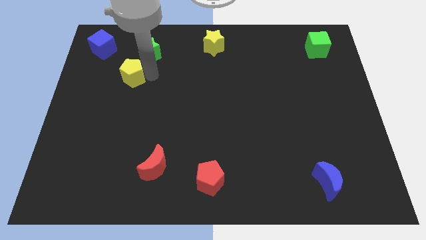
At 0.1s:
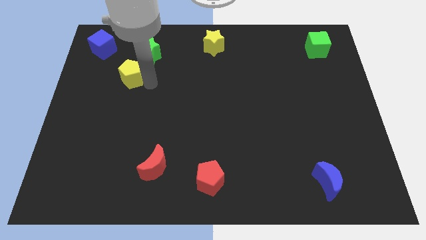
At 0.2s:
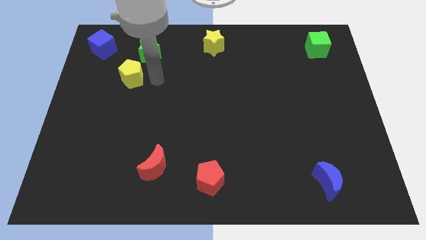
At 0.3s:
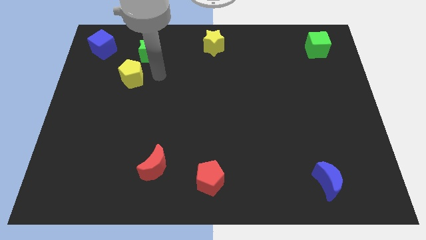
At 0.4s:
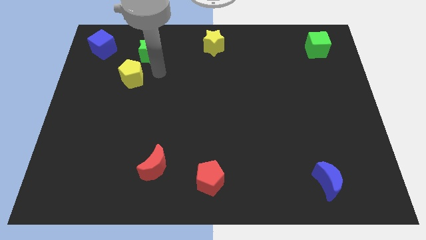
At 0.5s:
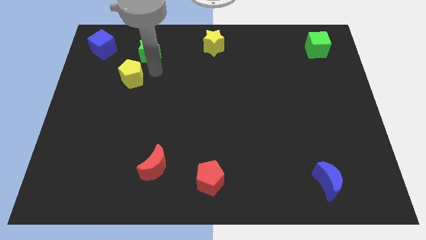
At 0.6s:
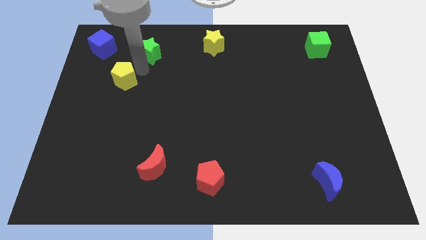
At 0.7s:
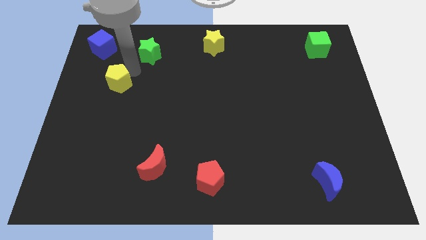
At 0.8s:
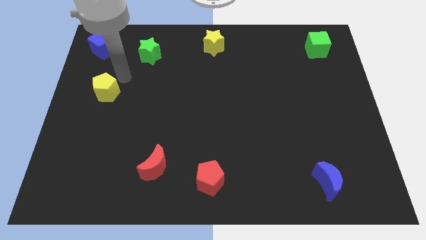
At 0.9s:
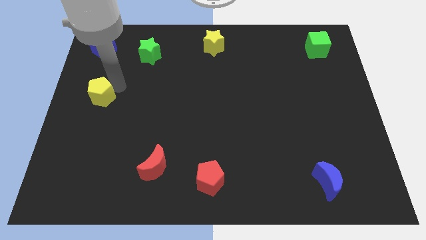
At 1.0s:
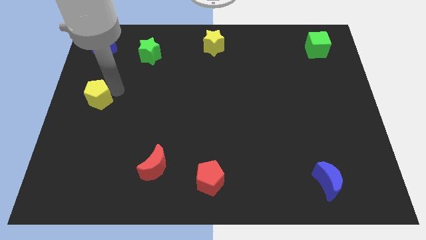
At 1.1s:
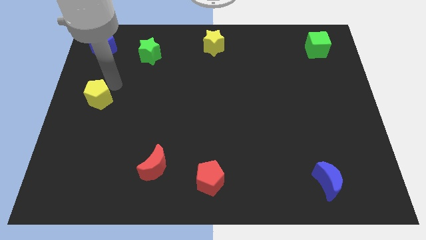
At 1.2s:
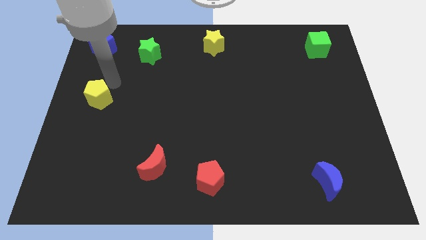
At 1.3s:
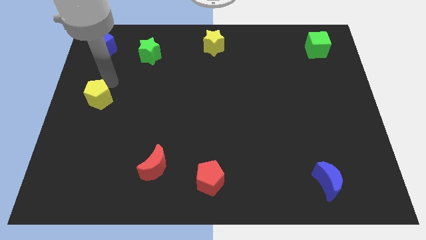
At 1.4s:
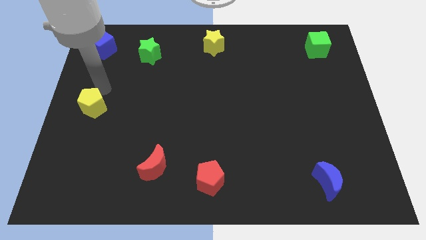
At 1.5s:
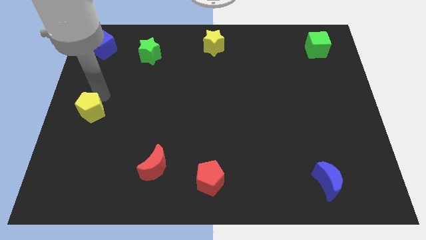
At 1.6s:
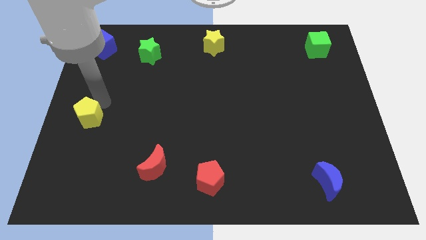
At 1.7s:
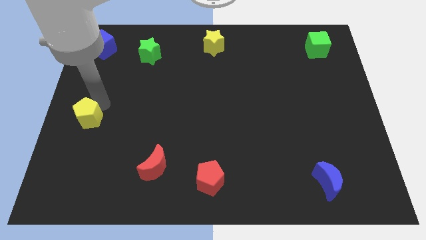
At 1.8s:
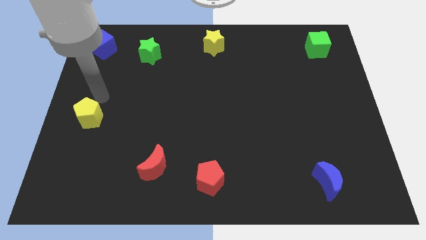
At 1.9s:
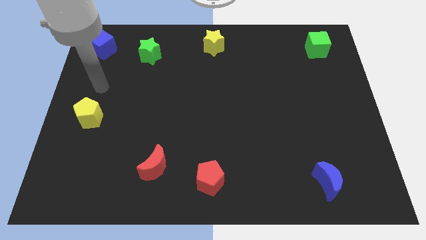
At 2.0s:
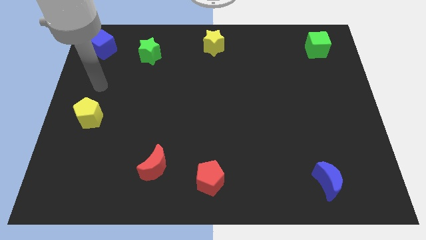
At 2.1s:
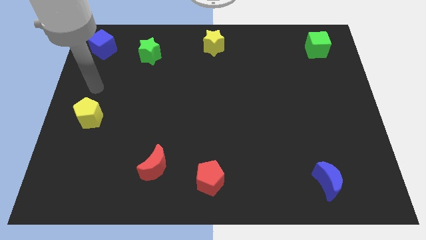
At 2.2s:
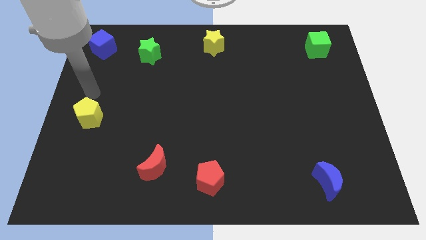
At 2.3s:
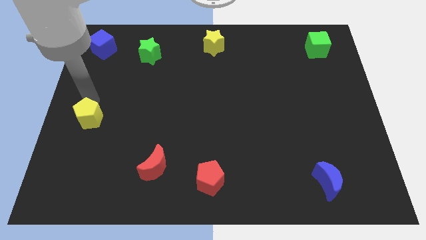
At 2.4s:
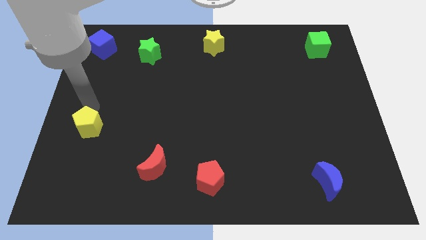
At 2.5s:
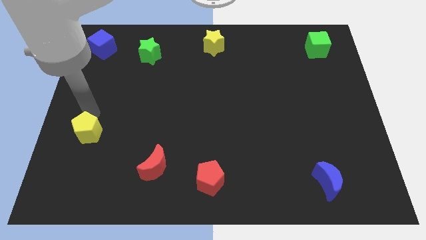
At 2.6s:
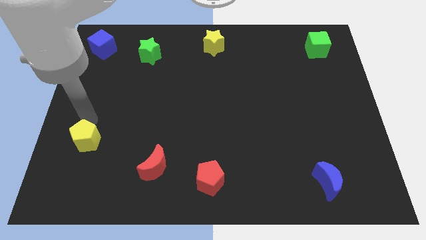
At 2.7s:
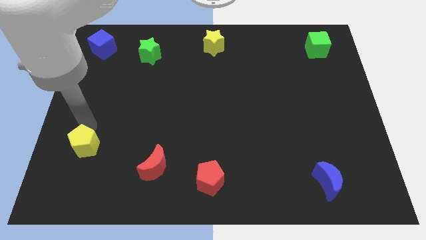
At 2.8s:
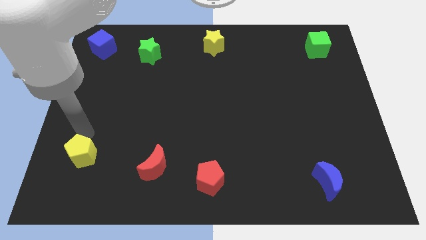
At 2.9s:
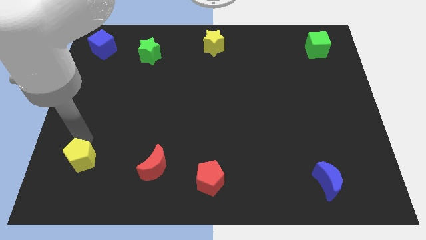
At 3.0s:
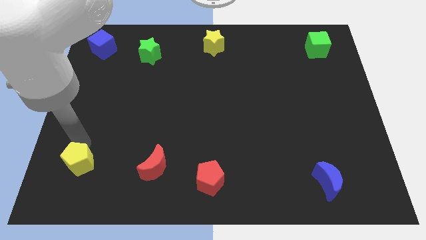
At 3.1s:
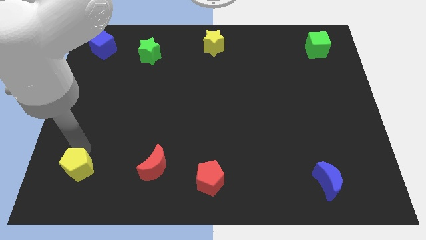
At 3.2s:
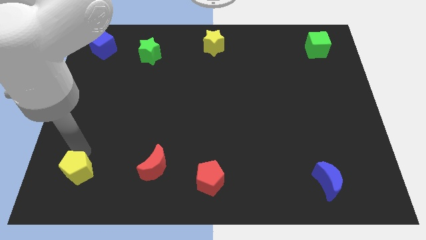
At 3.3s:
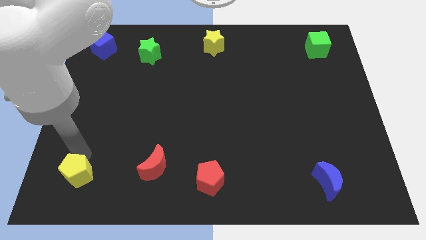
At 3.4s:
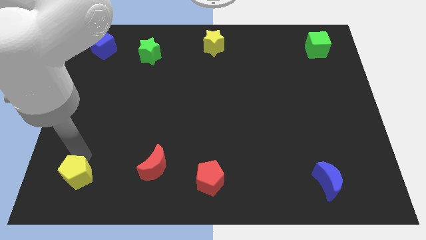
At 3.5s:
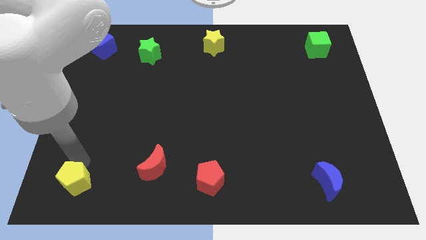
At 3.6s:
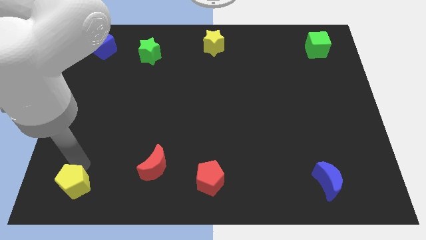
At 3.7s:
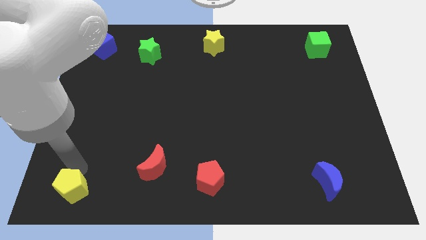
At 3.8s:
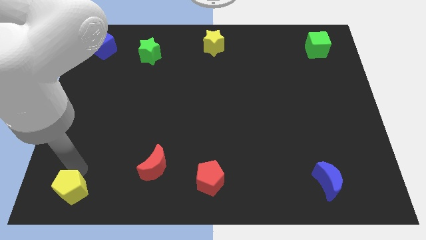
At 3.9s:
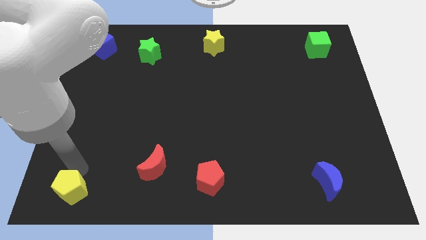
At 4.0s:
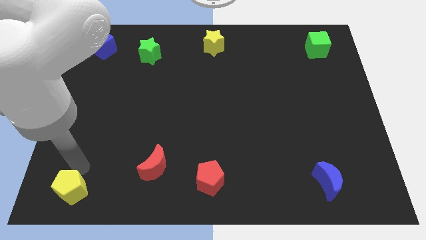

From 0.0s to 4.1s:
push the yellow pentagon to the bottom left

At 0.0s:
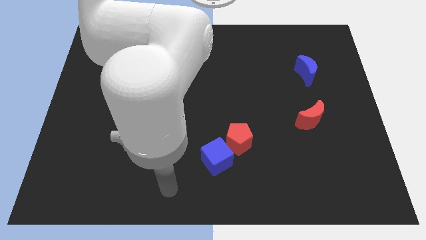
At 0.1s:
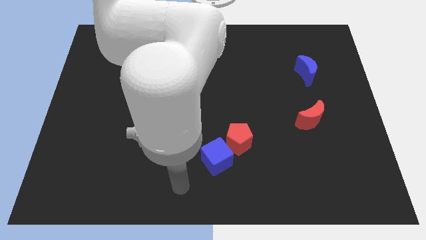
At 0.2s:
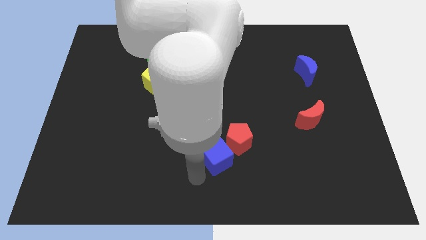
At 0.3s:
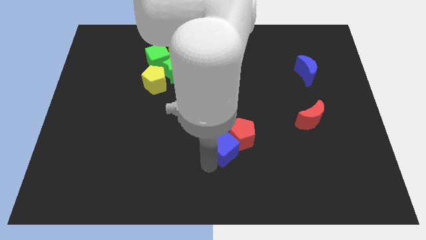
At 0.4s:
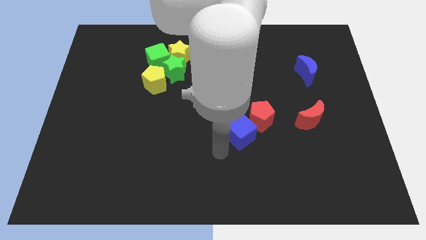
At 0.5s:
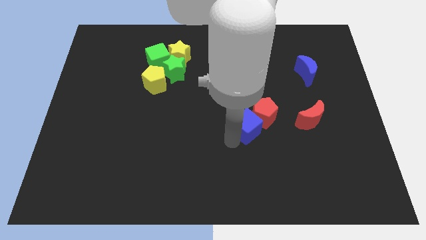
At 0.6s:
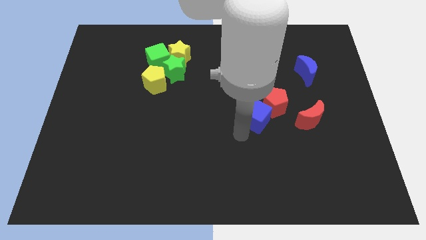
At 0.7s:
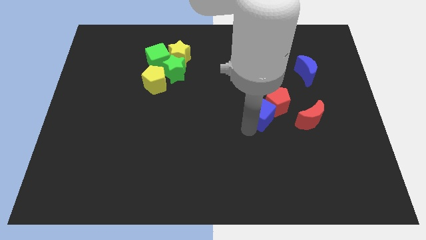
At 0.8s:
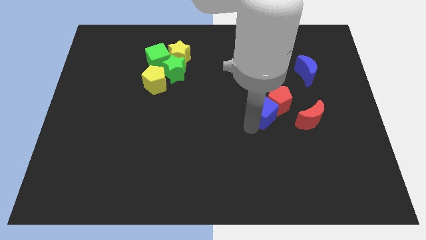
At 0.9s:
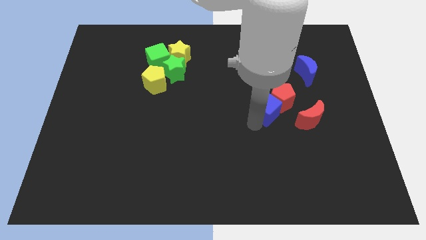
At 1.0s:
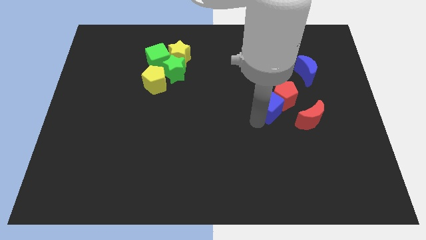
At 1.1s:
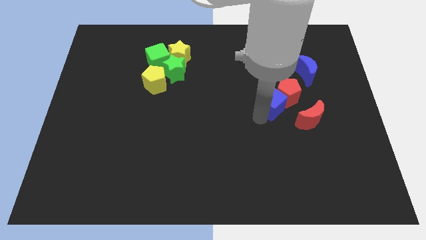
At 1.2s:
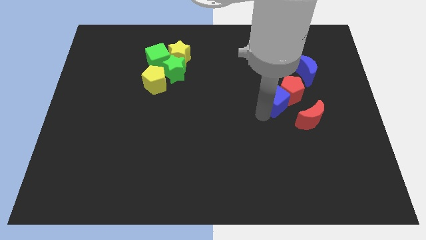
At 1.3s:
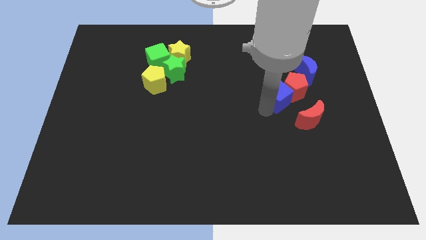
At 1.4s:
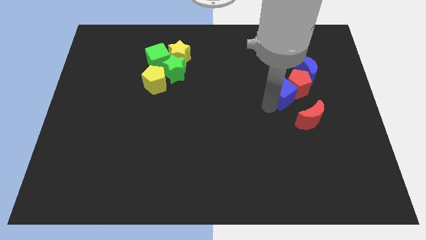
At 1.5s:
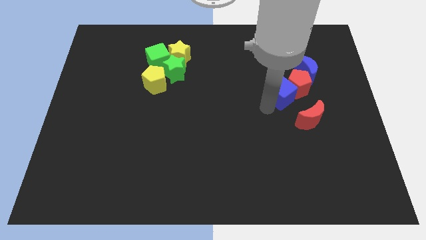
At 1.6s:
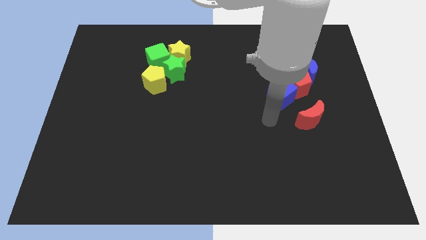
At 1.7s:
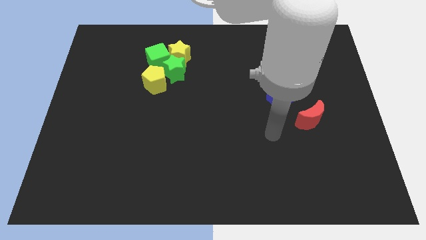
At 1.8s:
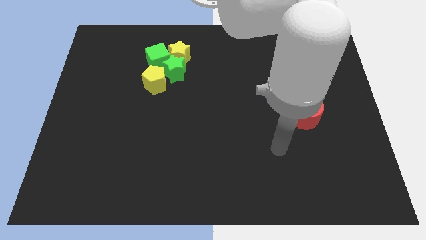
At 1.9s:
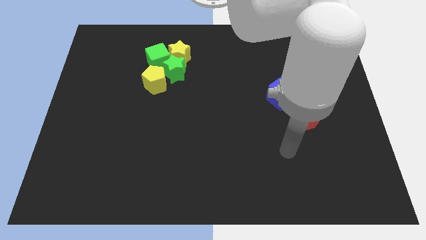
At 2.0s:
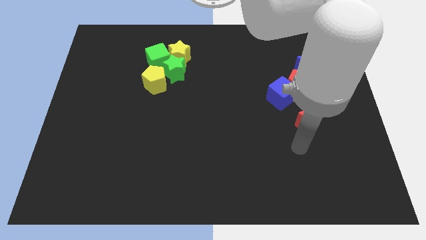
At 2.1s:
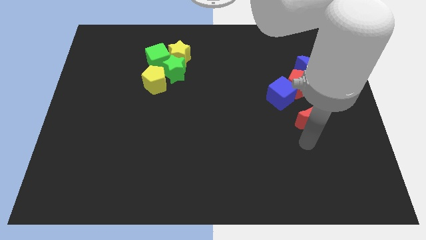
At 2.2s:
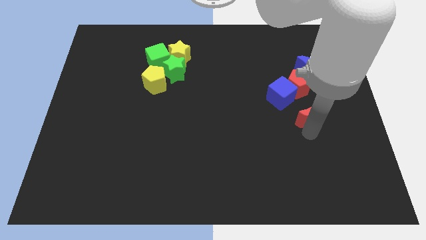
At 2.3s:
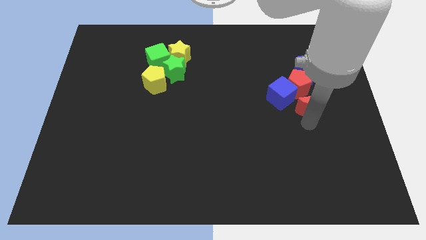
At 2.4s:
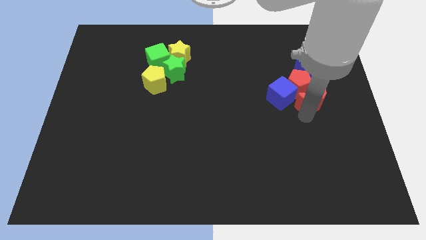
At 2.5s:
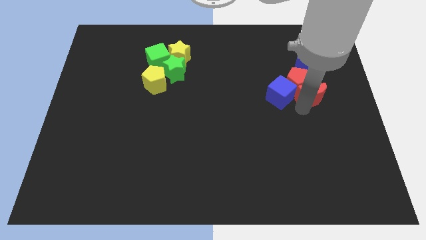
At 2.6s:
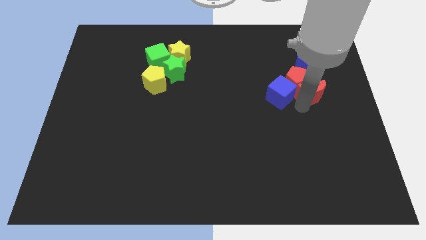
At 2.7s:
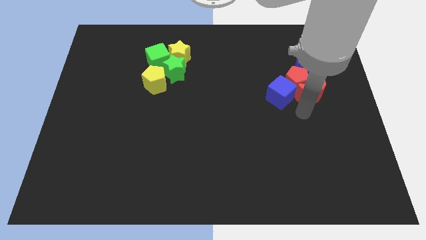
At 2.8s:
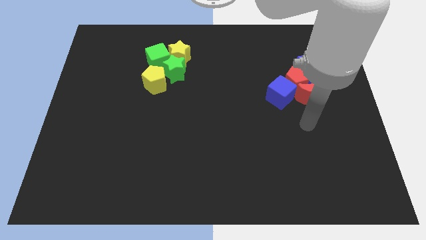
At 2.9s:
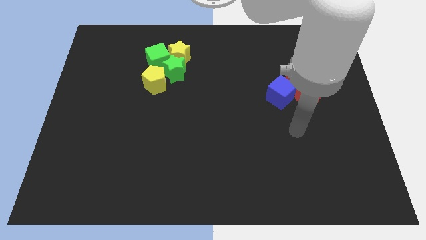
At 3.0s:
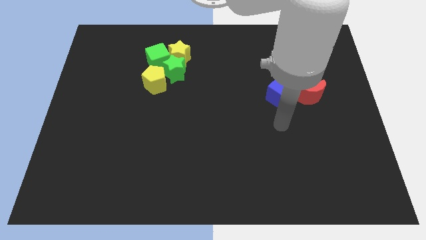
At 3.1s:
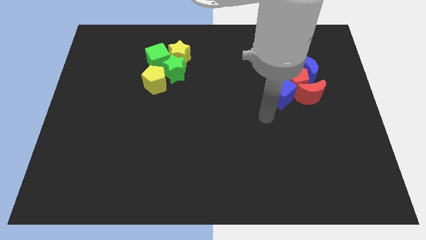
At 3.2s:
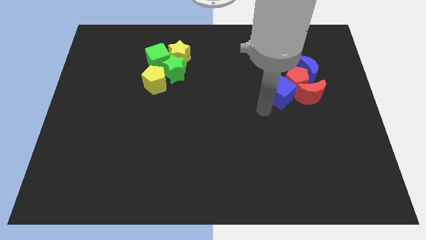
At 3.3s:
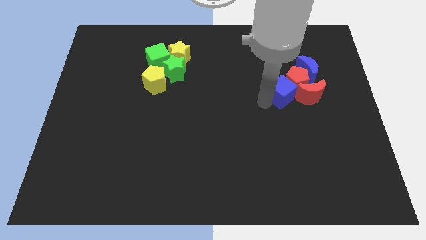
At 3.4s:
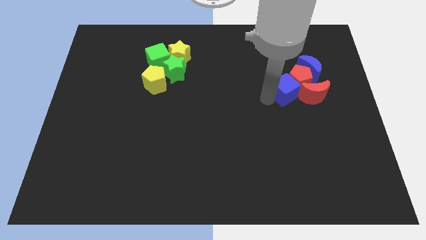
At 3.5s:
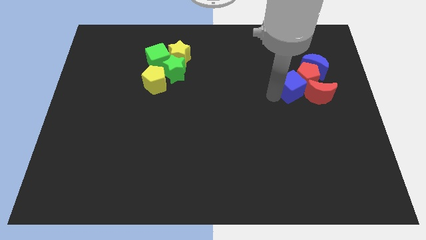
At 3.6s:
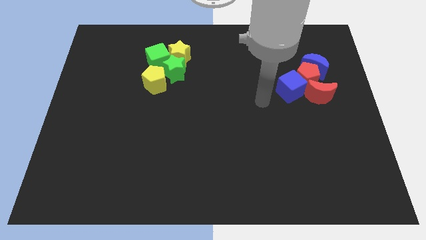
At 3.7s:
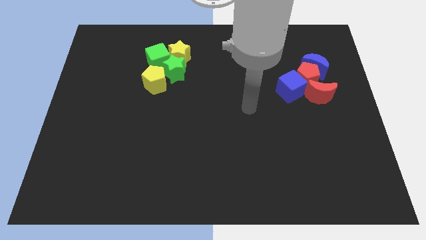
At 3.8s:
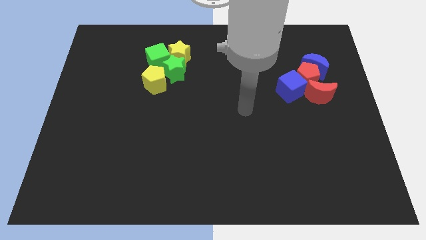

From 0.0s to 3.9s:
group up the red and blue blocks at the top right side of the board

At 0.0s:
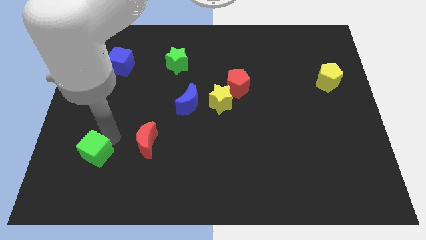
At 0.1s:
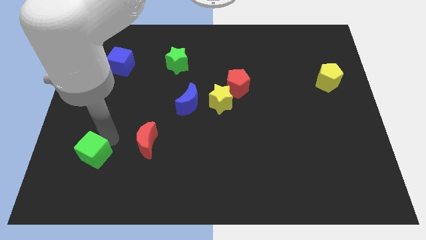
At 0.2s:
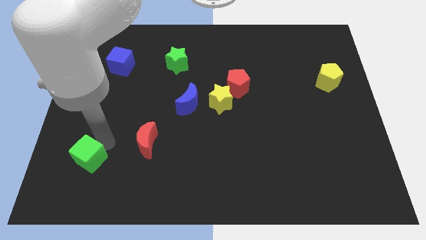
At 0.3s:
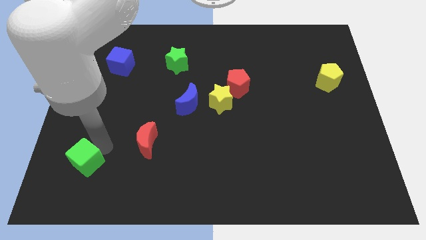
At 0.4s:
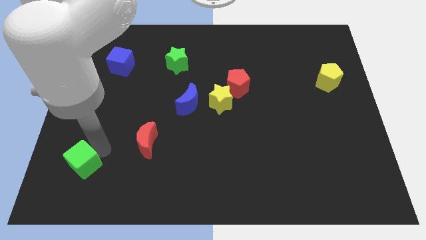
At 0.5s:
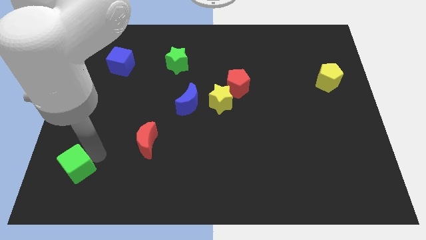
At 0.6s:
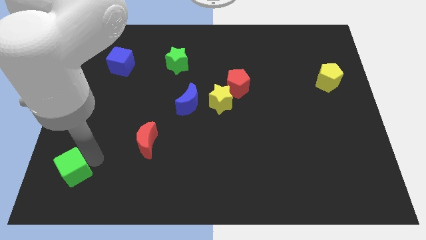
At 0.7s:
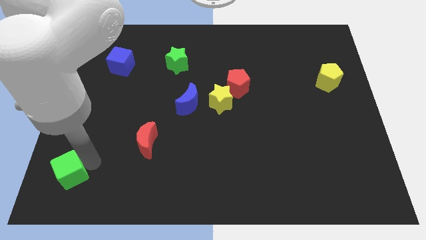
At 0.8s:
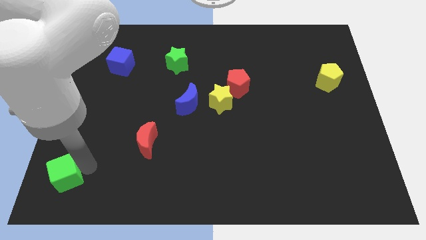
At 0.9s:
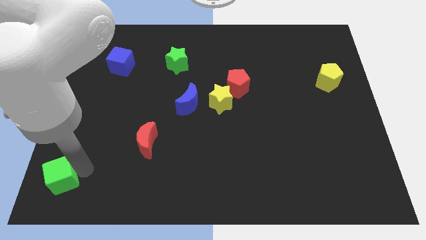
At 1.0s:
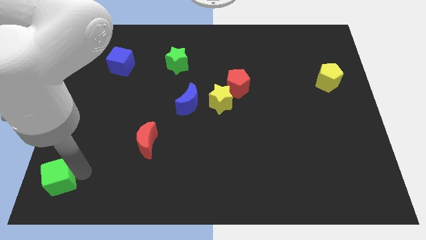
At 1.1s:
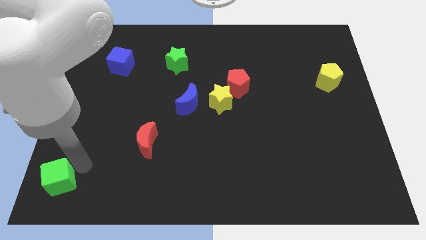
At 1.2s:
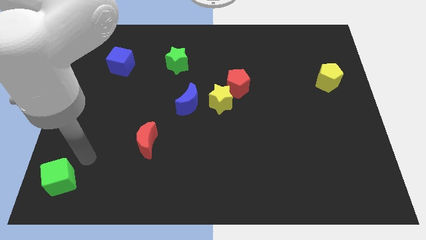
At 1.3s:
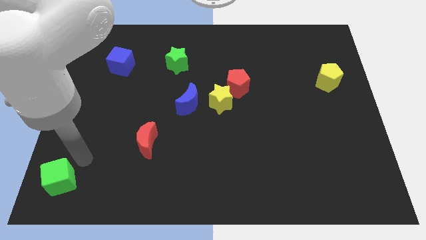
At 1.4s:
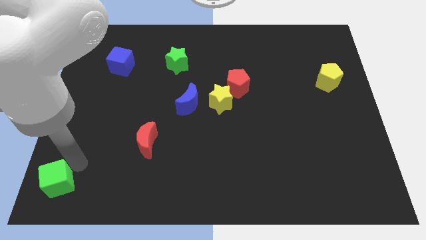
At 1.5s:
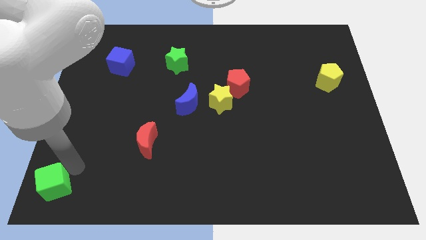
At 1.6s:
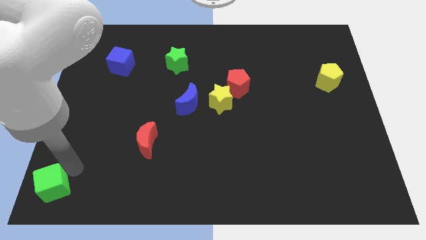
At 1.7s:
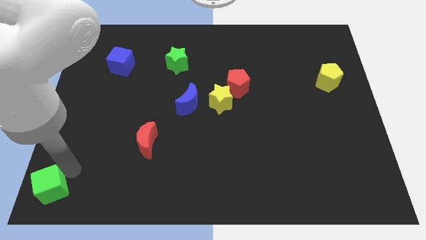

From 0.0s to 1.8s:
move green cube towards left bottom
